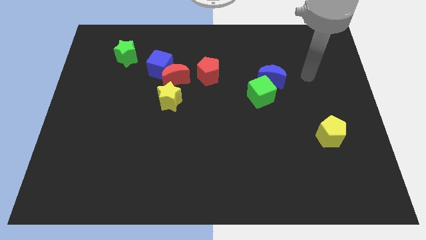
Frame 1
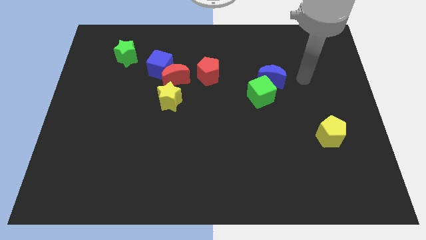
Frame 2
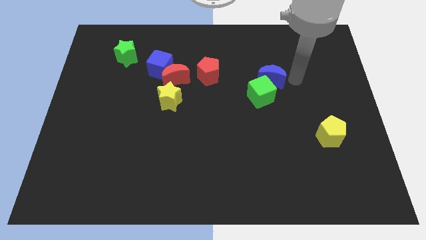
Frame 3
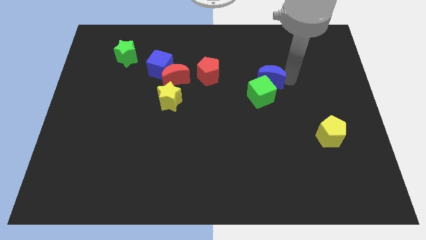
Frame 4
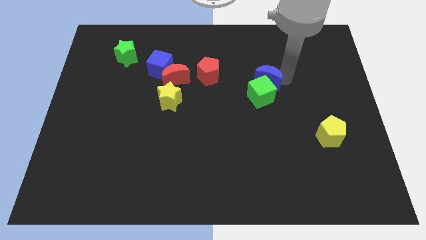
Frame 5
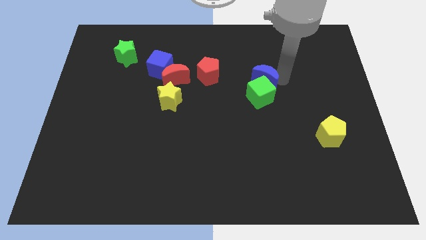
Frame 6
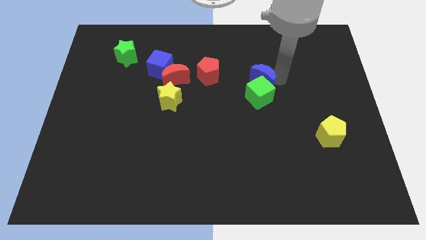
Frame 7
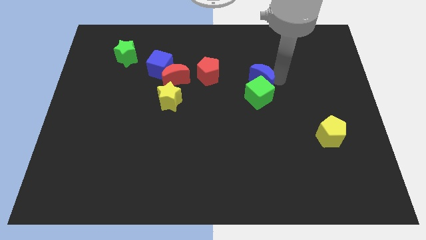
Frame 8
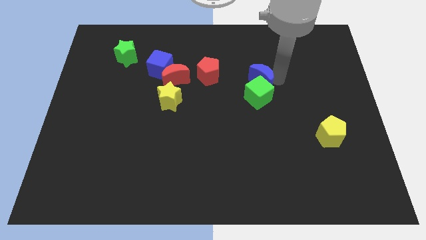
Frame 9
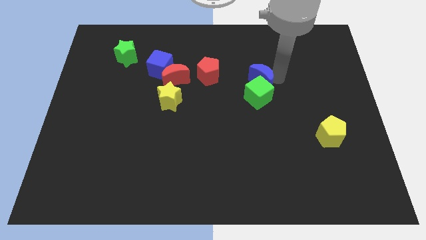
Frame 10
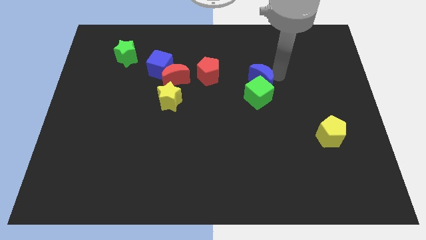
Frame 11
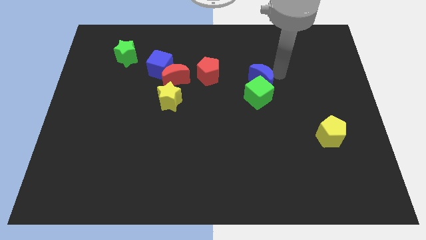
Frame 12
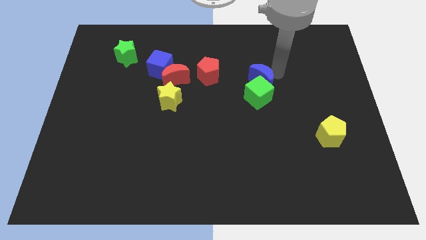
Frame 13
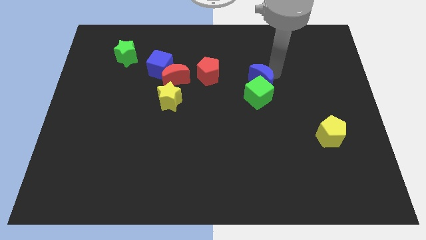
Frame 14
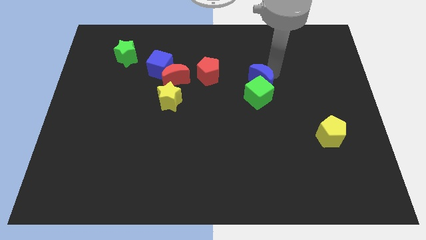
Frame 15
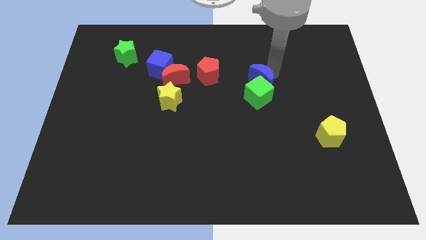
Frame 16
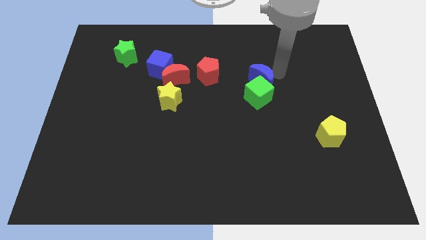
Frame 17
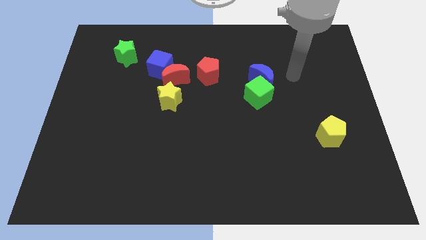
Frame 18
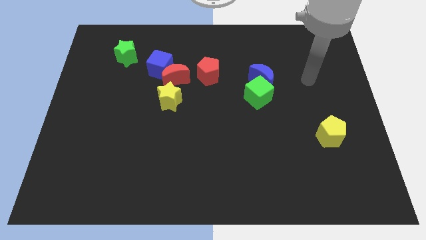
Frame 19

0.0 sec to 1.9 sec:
place the blue crescent to the top side of the green cube

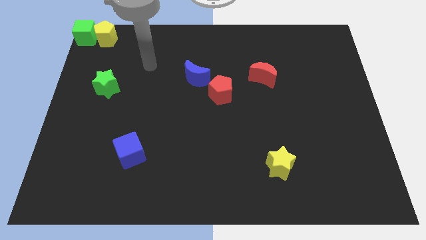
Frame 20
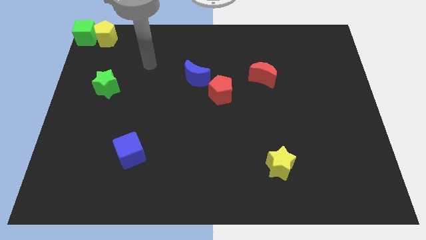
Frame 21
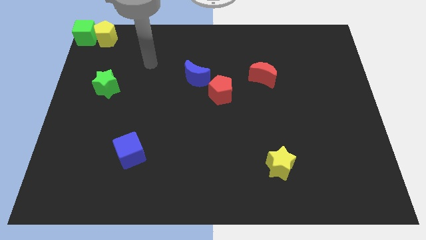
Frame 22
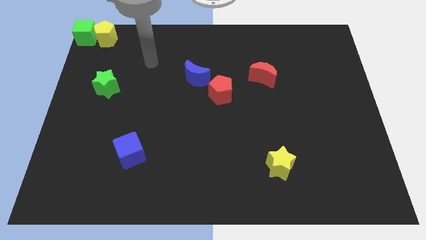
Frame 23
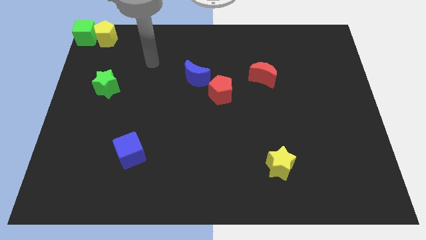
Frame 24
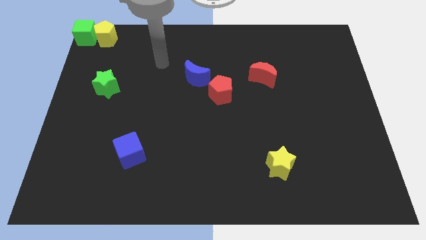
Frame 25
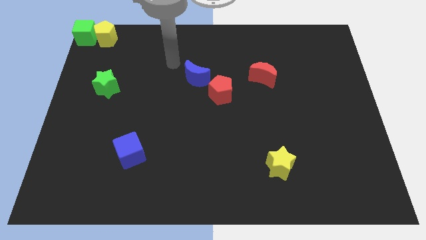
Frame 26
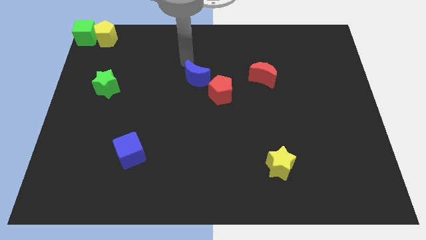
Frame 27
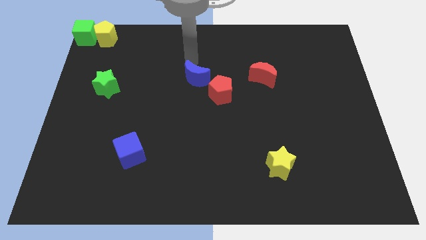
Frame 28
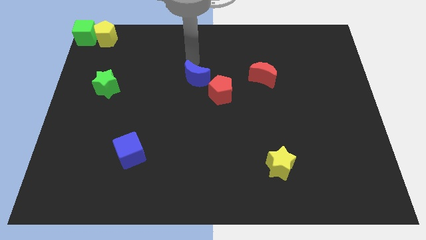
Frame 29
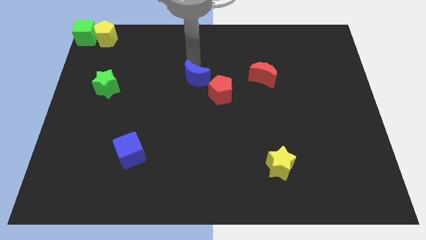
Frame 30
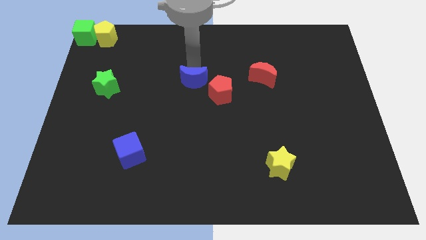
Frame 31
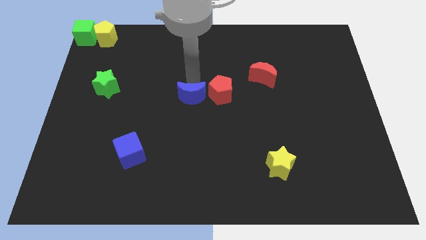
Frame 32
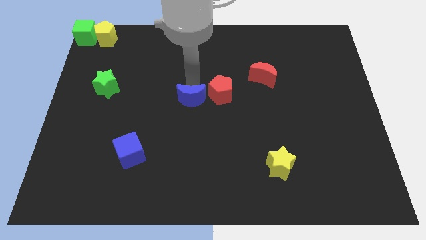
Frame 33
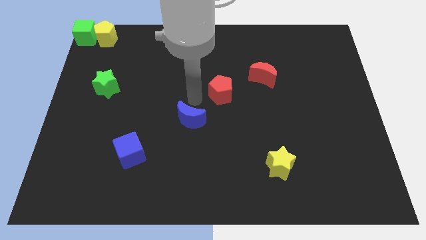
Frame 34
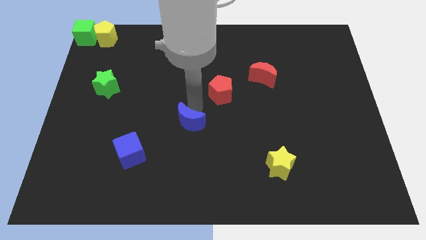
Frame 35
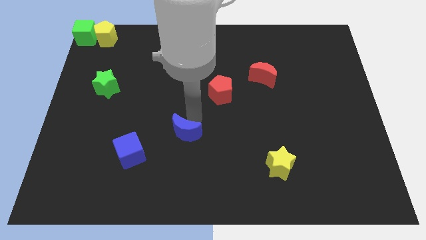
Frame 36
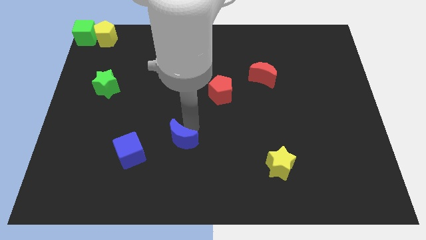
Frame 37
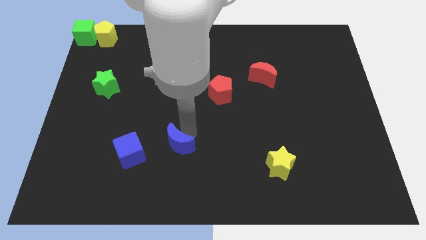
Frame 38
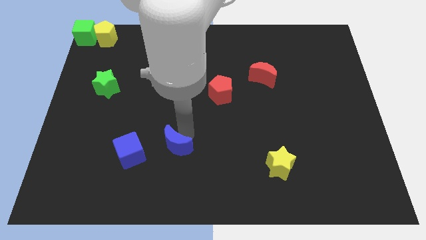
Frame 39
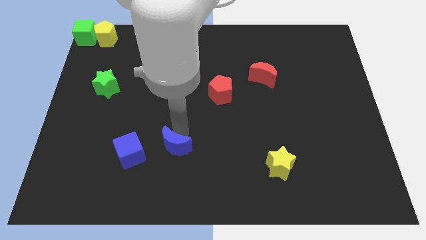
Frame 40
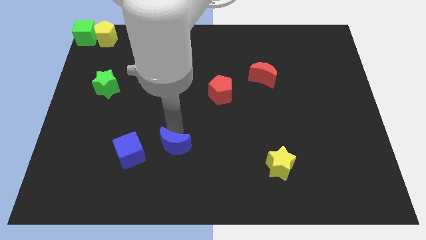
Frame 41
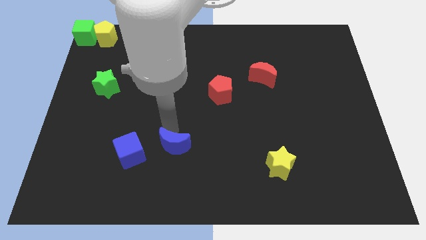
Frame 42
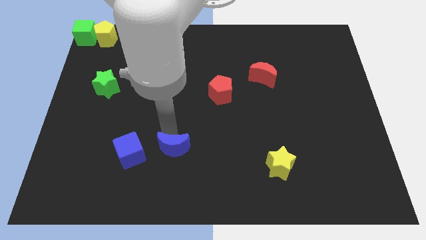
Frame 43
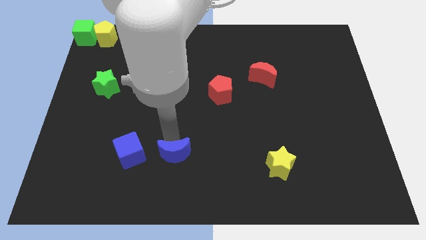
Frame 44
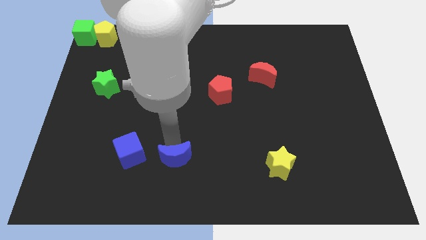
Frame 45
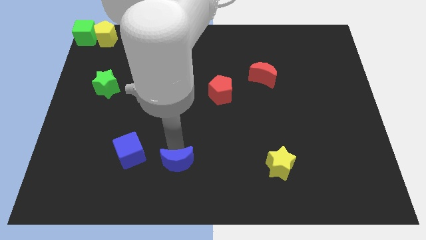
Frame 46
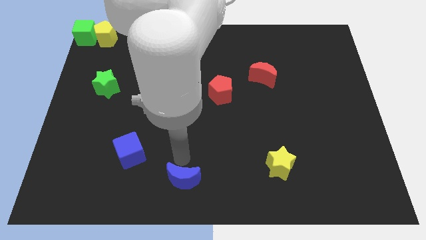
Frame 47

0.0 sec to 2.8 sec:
move the blue crescent tto the right of blue cube

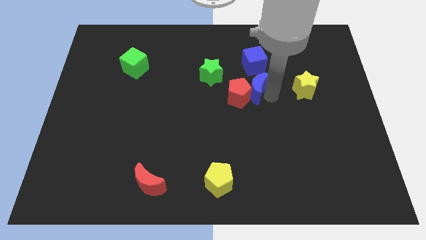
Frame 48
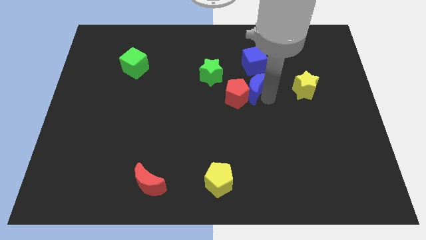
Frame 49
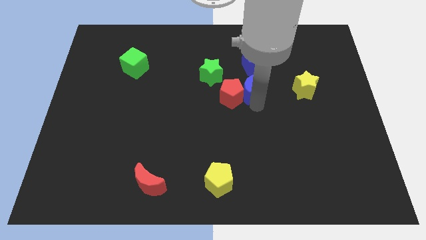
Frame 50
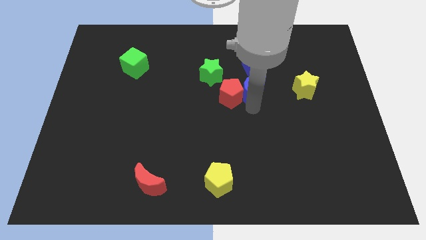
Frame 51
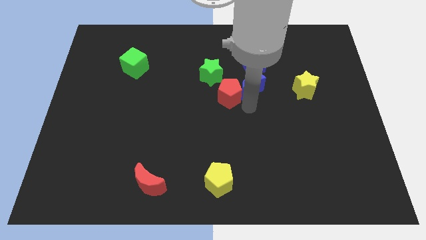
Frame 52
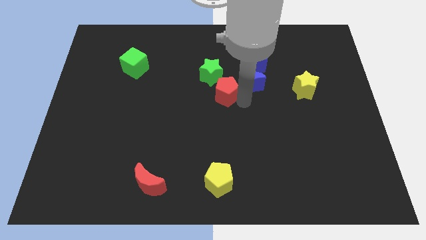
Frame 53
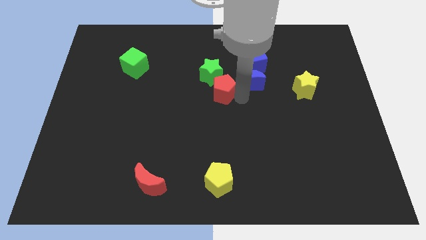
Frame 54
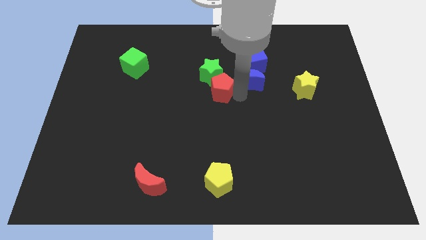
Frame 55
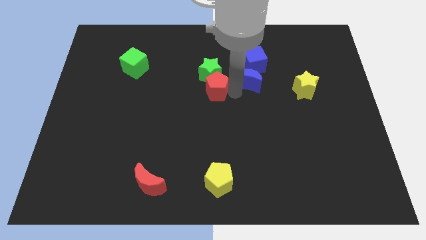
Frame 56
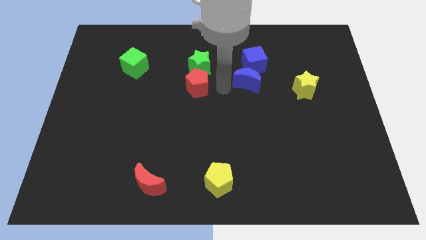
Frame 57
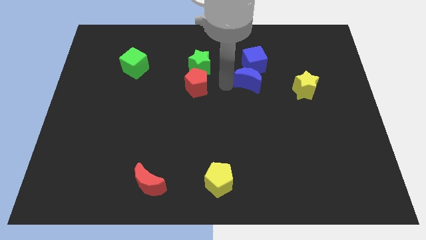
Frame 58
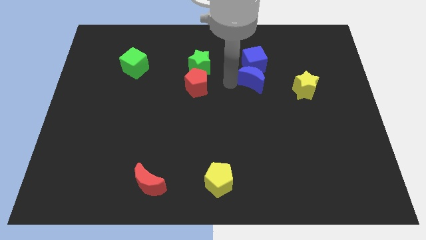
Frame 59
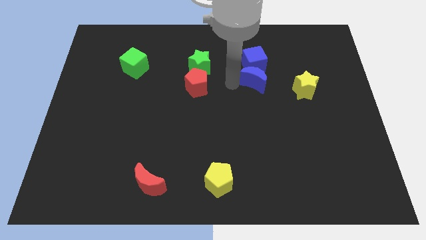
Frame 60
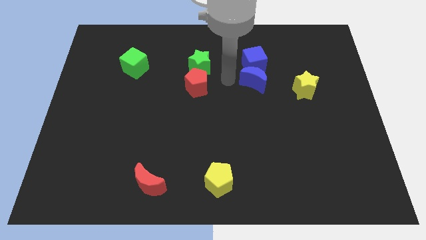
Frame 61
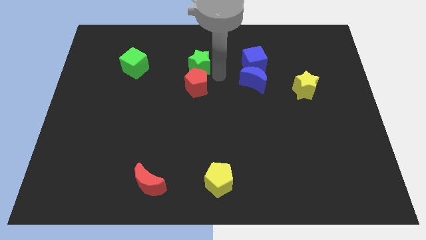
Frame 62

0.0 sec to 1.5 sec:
push the blue moon into the red pentagon

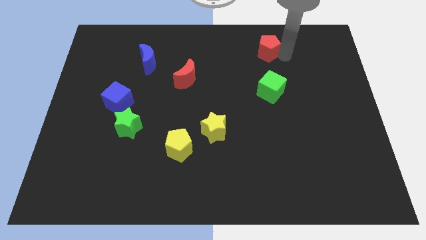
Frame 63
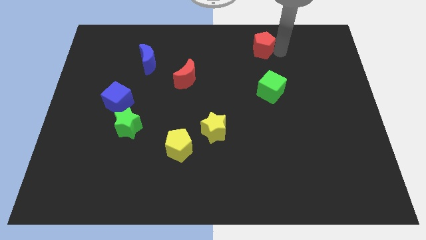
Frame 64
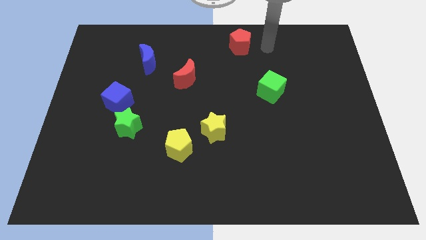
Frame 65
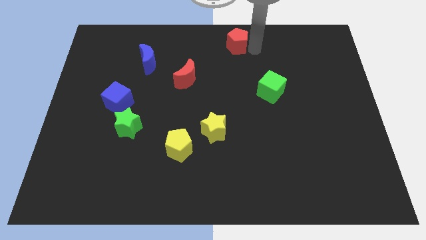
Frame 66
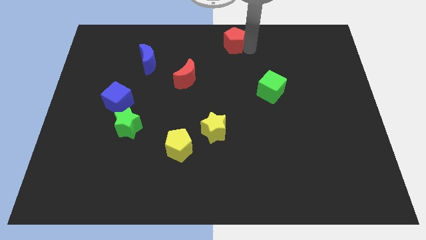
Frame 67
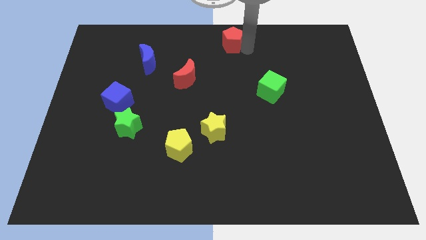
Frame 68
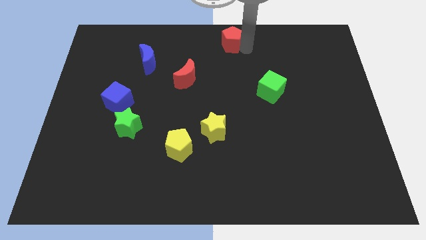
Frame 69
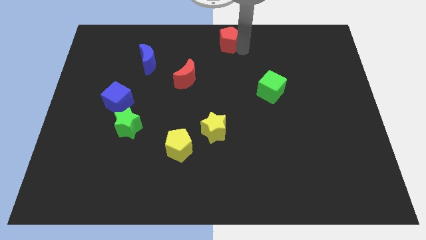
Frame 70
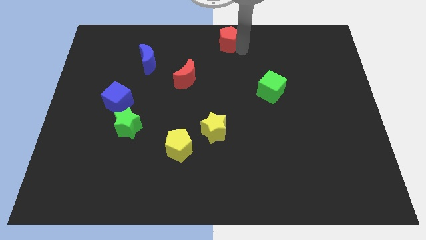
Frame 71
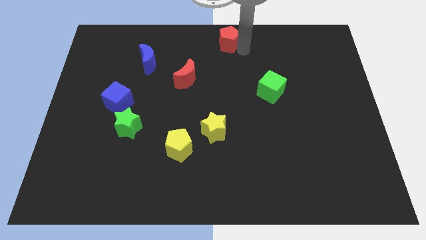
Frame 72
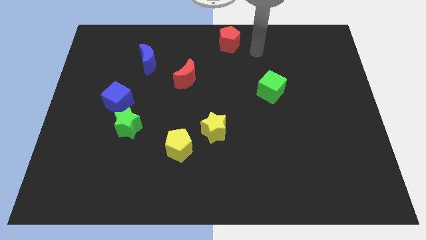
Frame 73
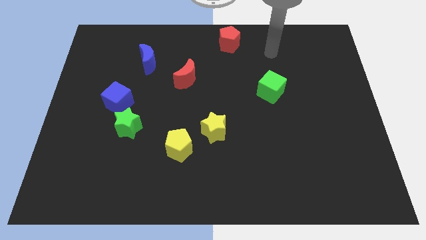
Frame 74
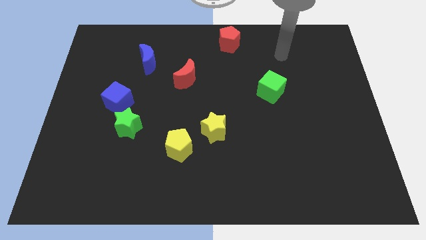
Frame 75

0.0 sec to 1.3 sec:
slide the red pentagon slightly towards the top center of the board

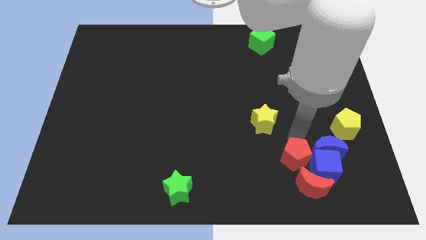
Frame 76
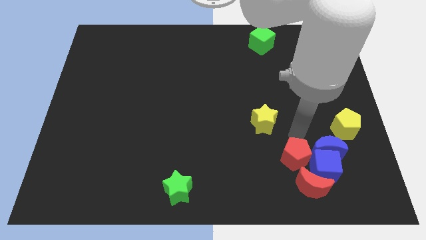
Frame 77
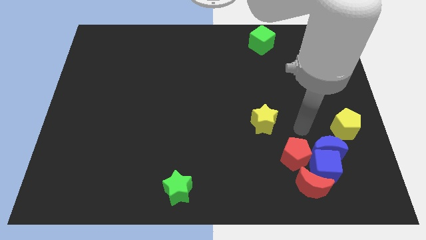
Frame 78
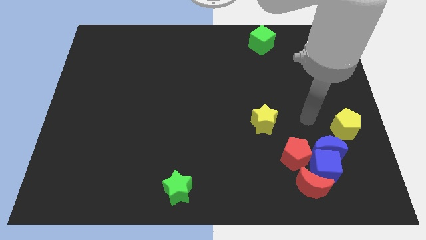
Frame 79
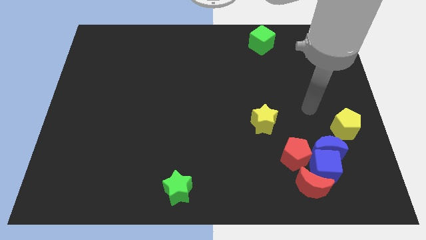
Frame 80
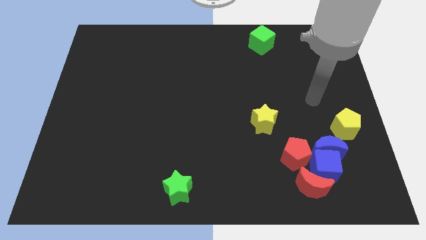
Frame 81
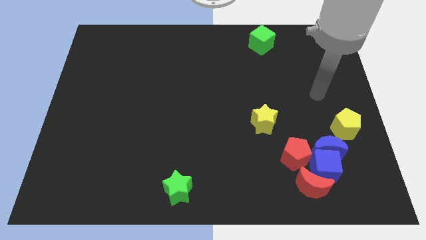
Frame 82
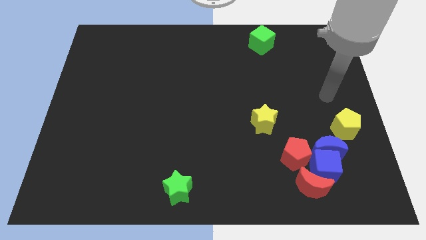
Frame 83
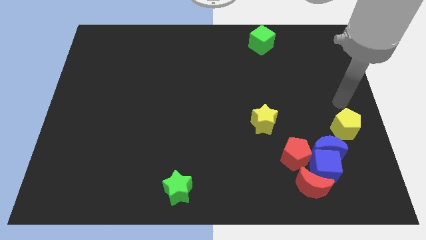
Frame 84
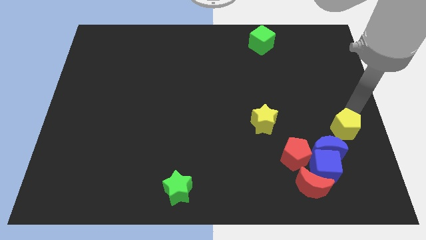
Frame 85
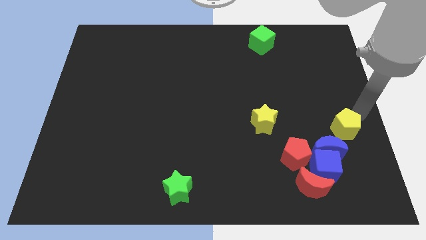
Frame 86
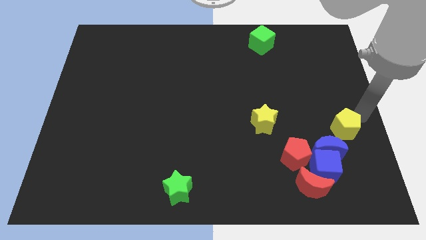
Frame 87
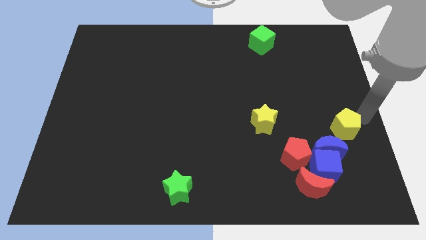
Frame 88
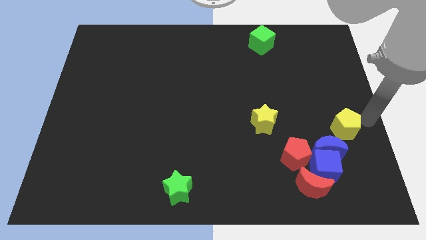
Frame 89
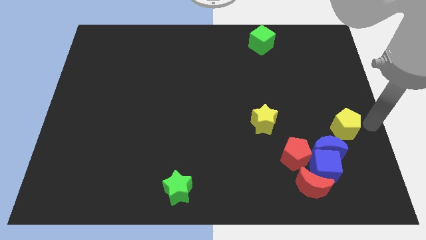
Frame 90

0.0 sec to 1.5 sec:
move your arm to the top right of the yellow pentagon

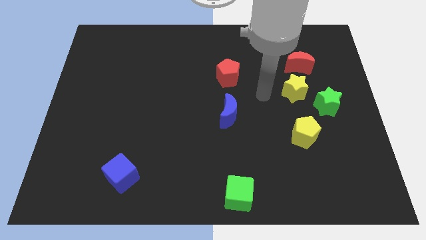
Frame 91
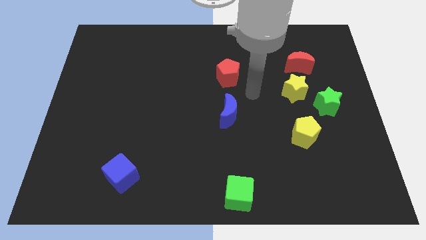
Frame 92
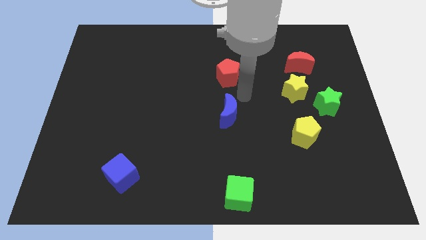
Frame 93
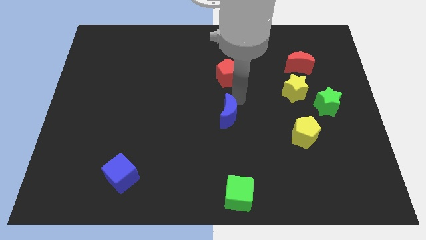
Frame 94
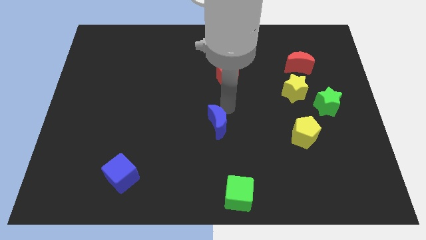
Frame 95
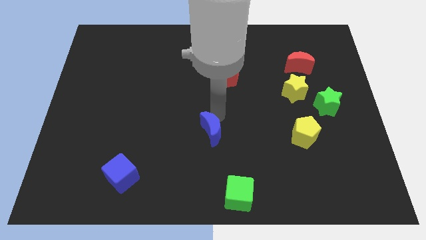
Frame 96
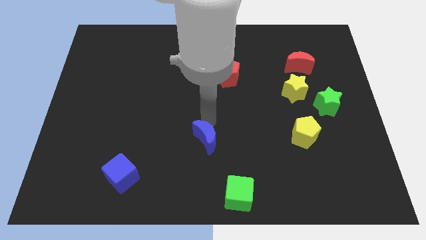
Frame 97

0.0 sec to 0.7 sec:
push blue moon slightly downwards
